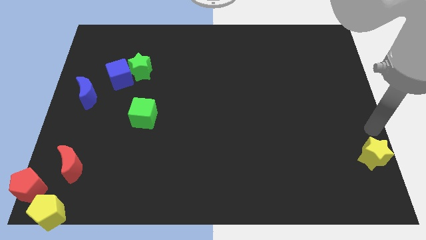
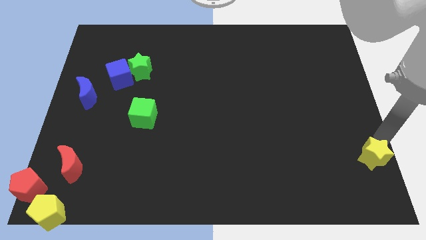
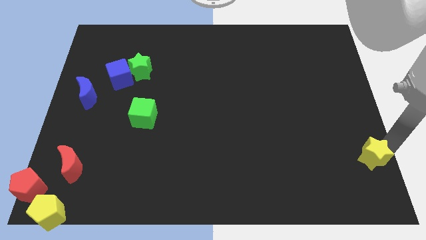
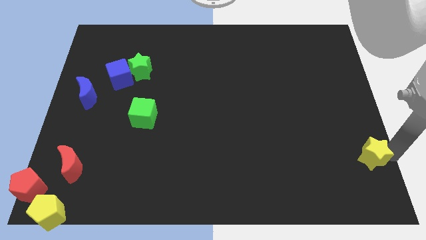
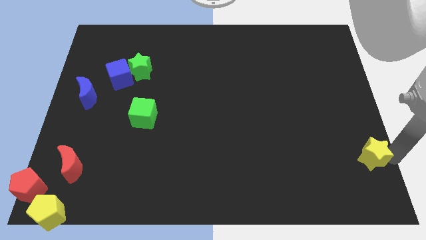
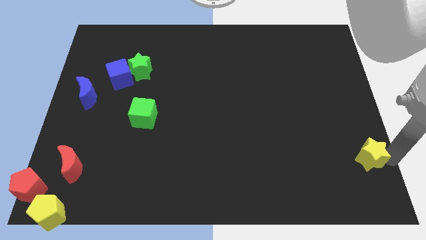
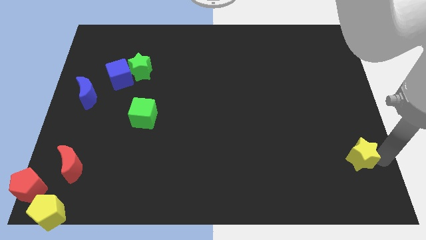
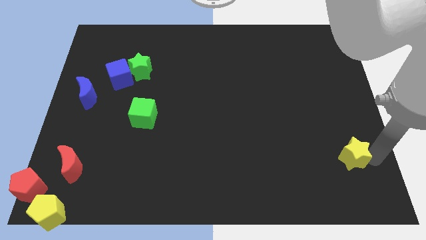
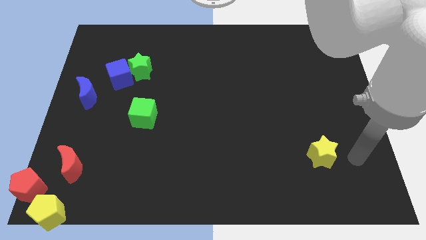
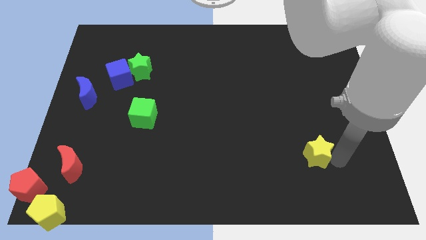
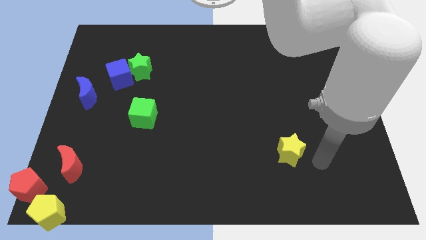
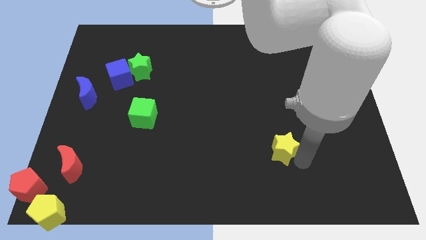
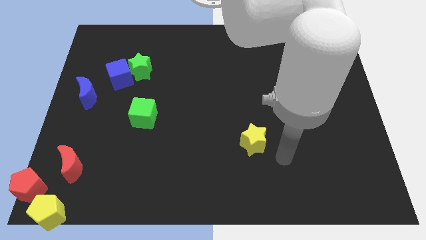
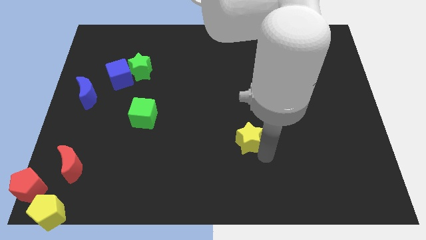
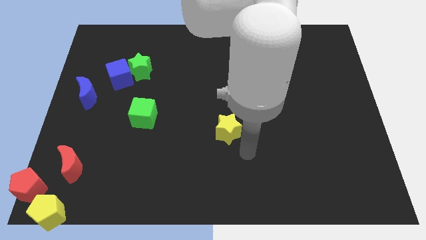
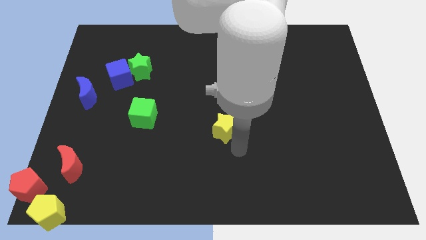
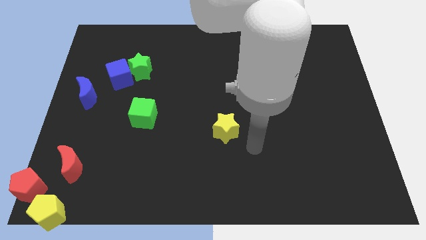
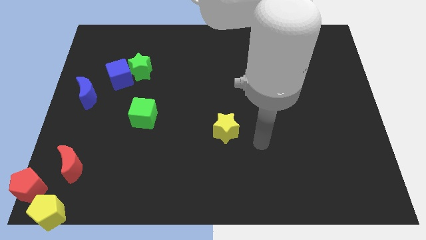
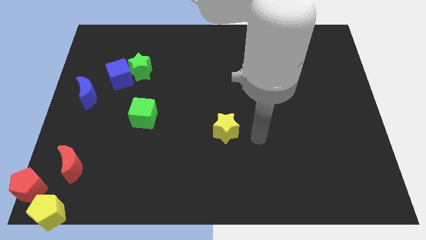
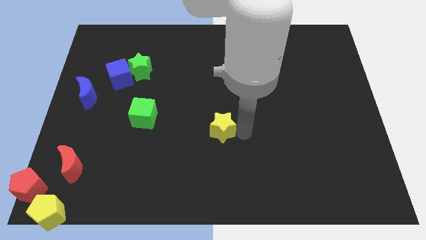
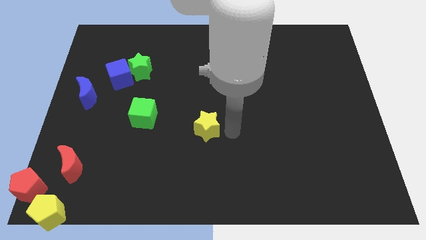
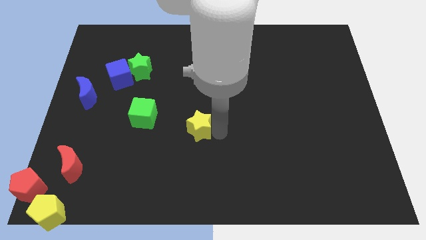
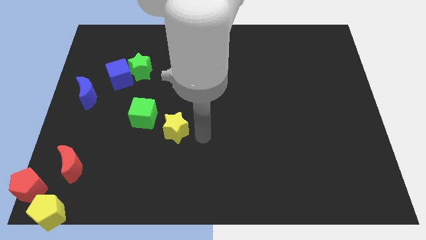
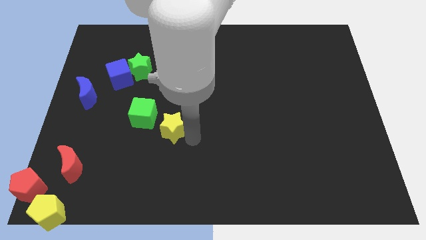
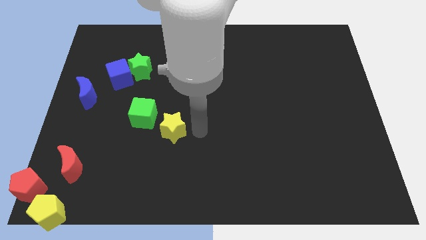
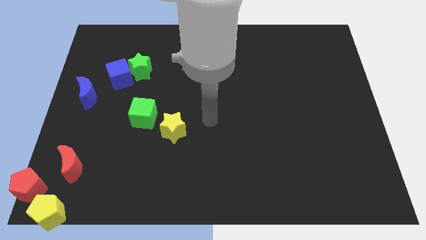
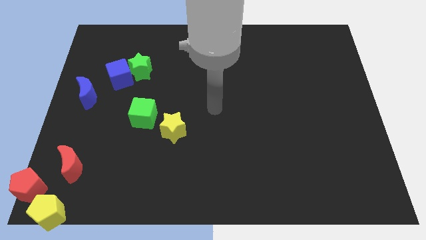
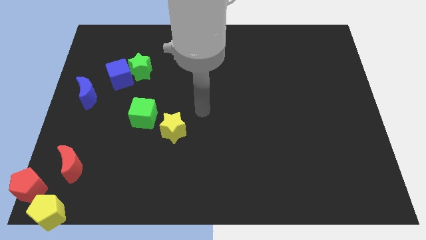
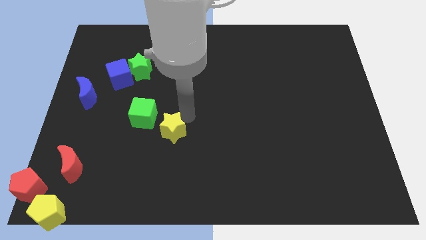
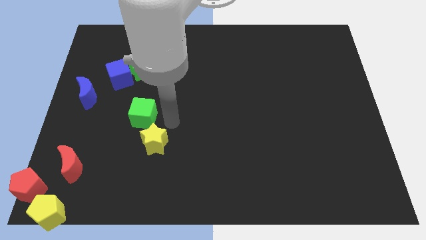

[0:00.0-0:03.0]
move yellow star towards green cube

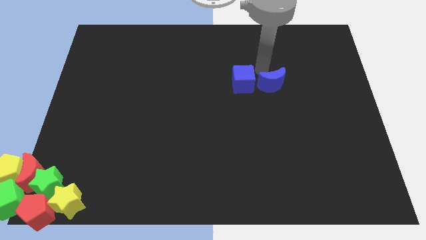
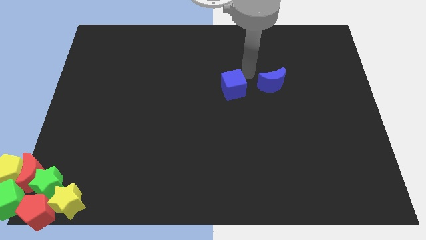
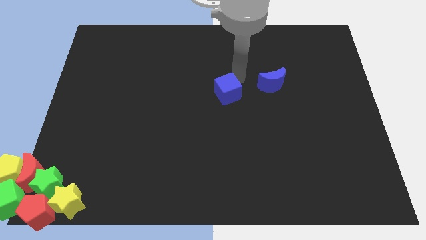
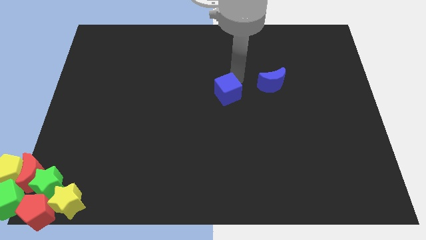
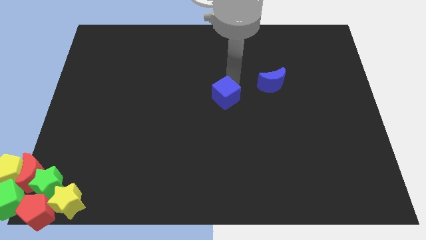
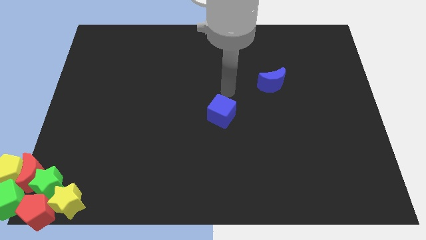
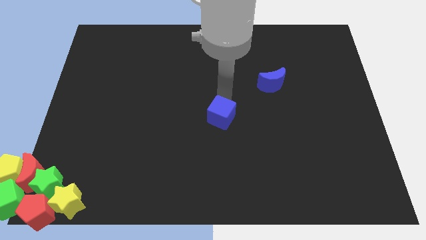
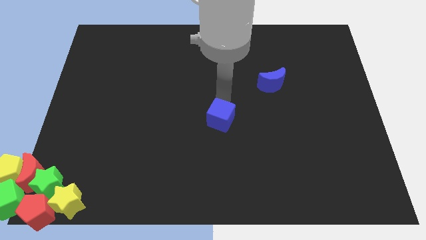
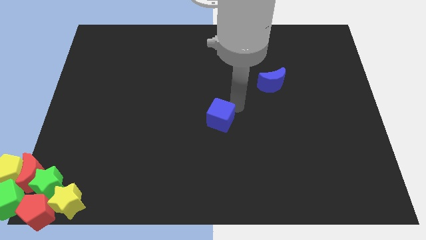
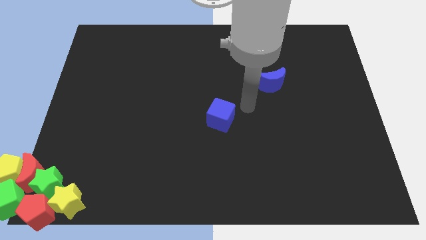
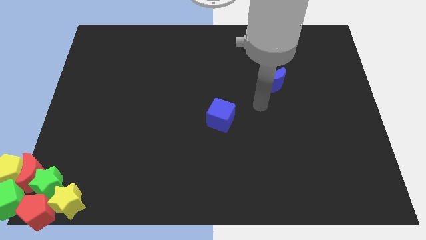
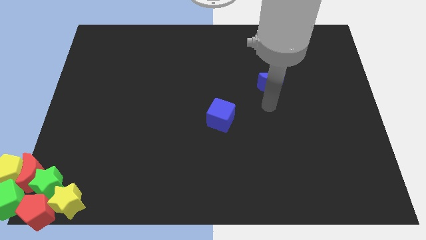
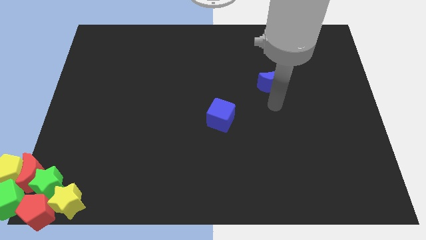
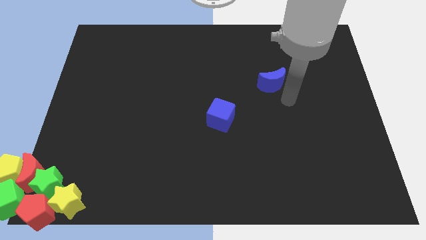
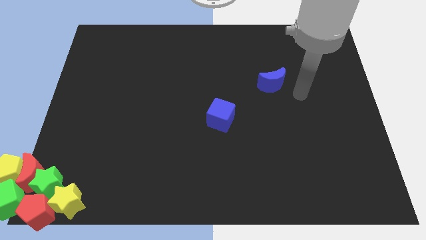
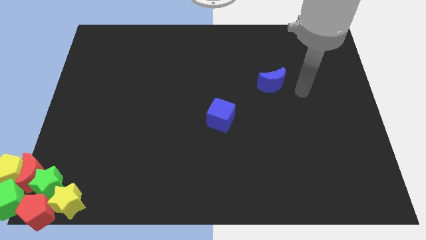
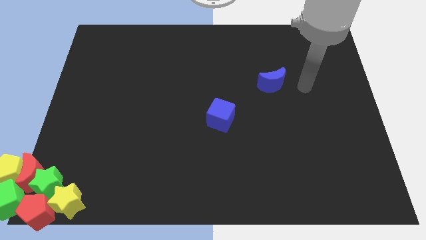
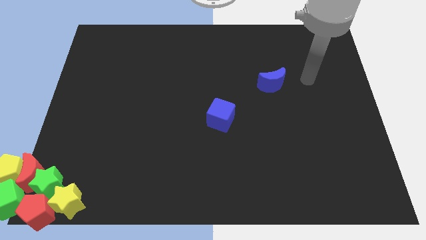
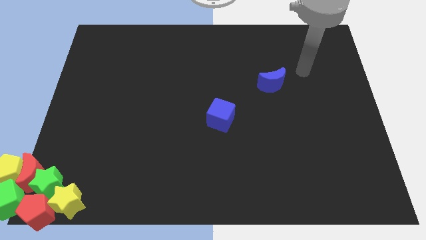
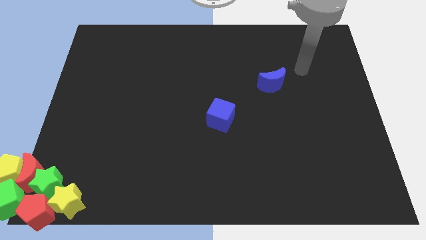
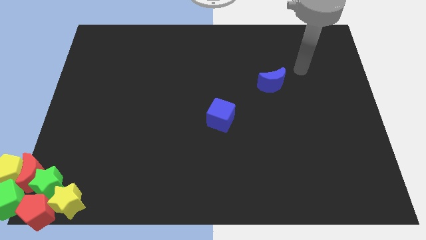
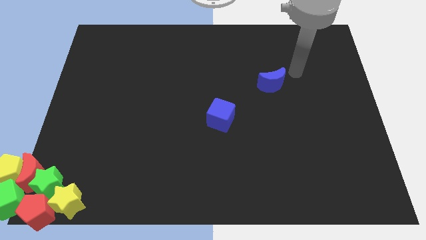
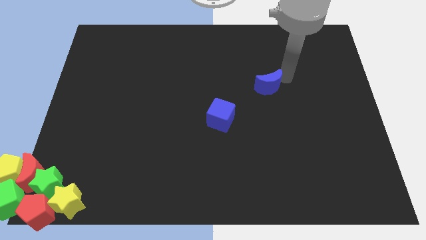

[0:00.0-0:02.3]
move the blue cube at the center of the board

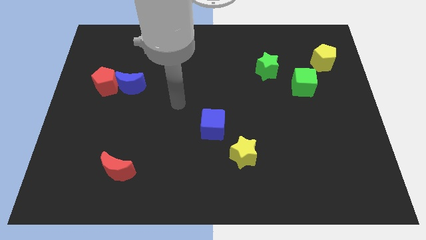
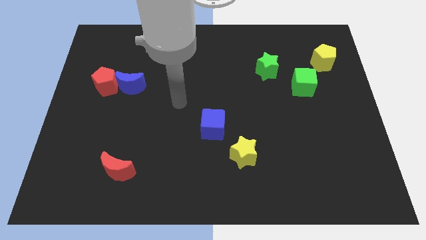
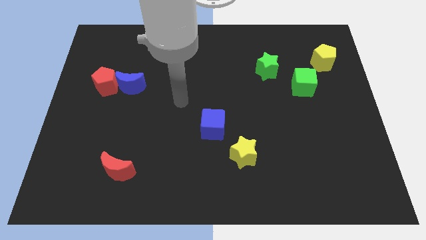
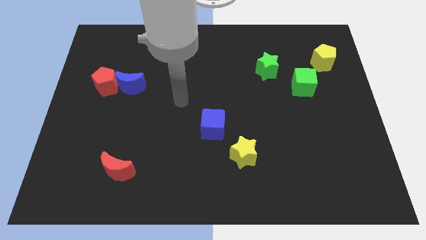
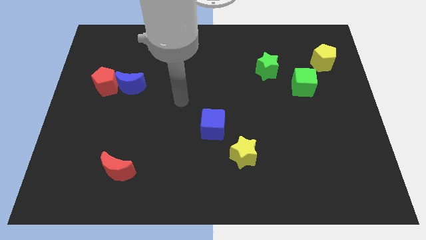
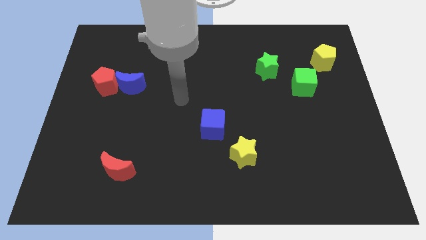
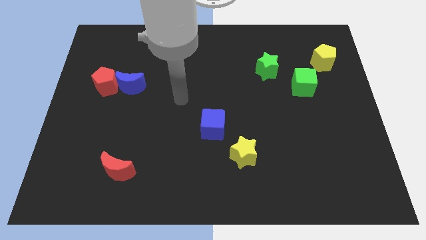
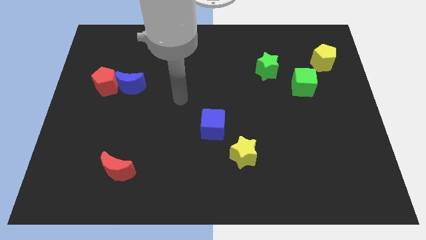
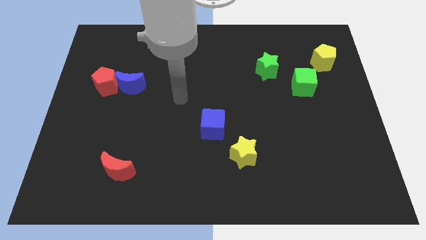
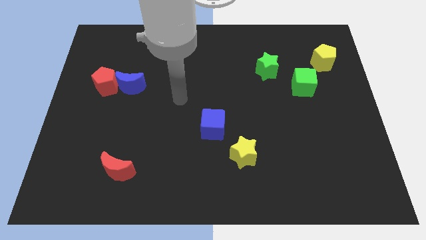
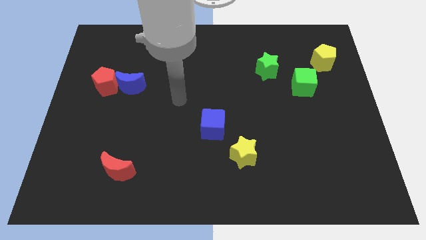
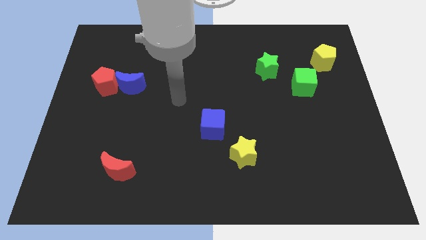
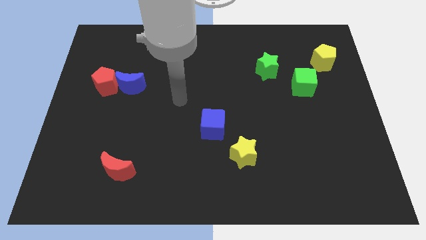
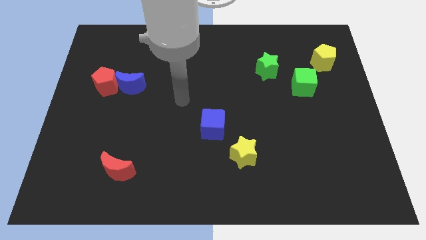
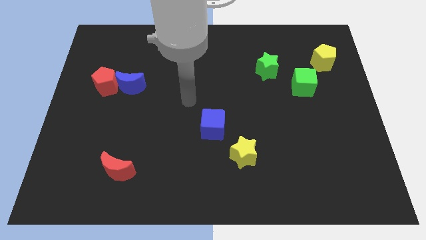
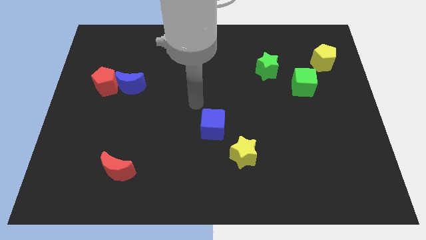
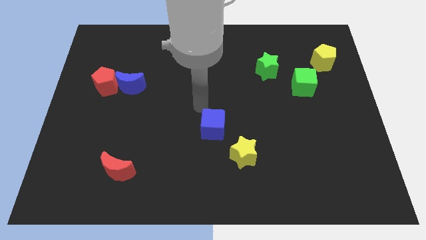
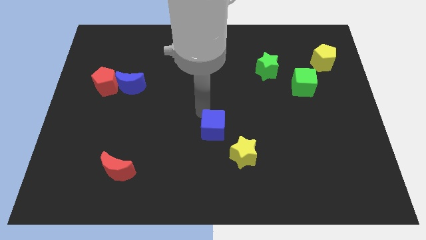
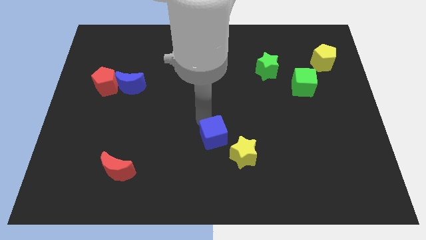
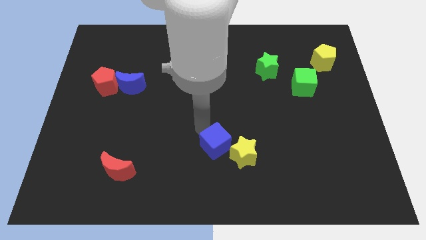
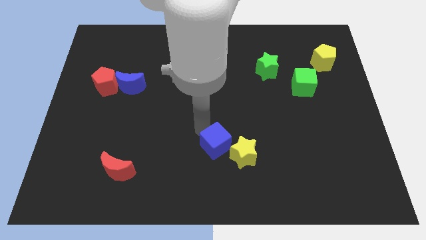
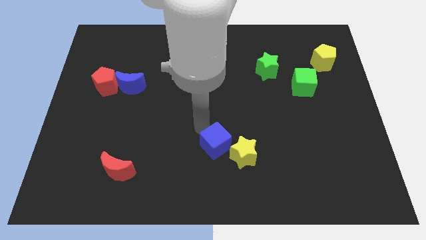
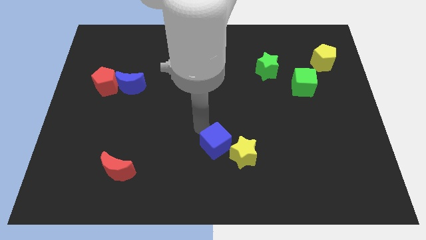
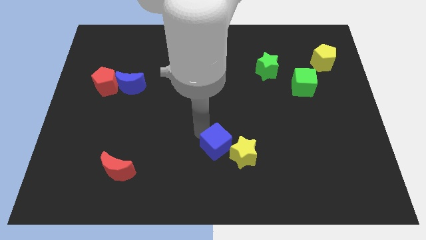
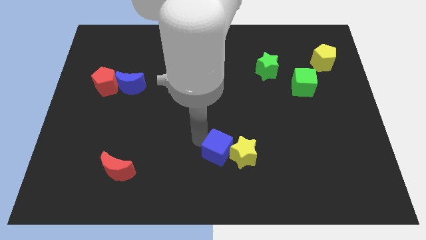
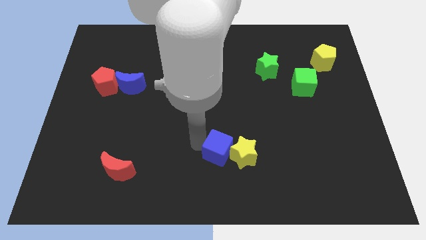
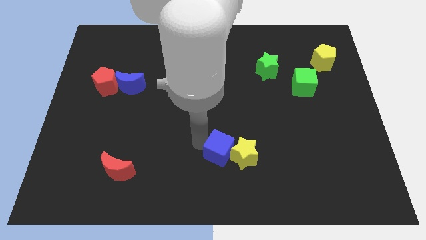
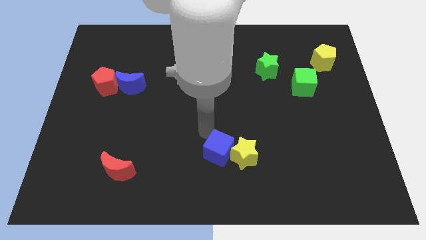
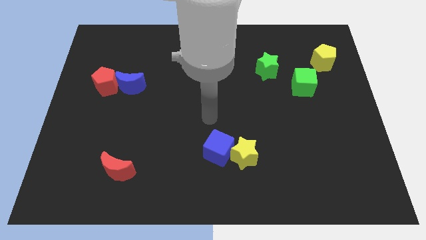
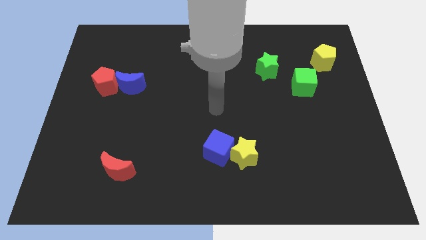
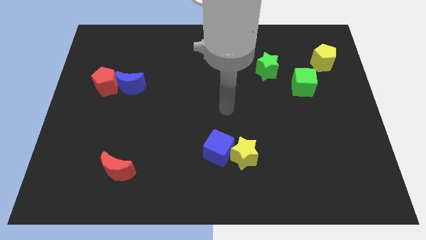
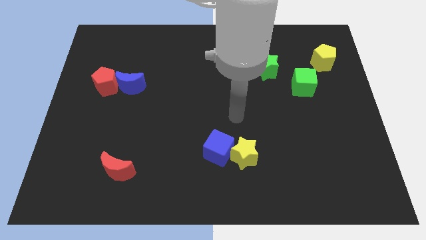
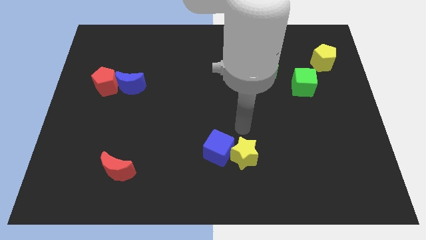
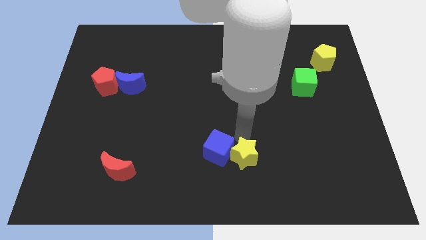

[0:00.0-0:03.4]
put the blue cube to the left of the yellow star

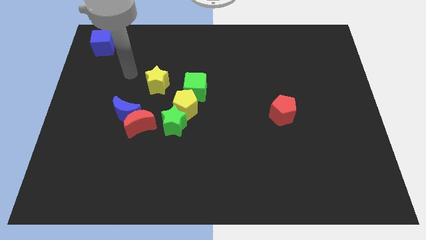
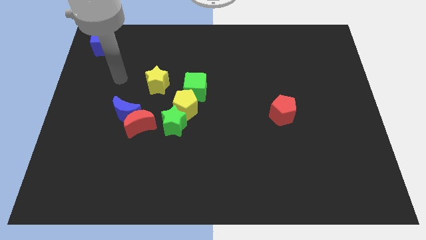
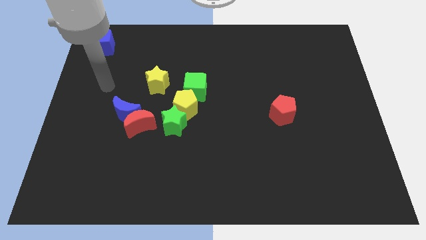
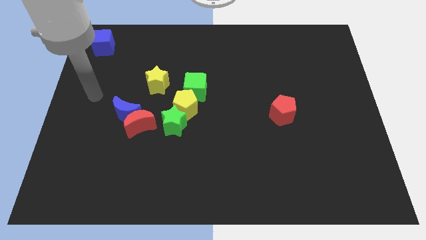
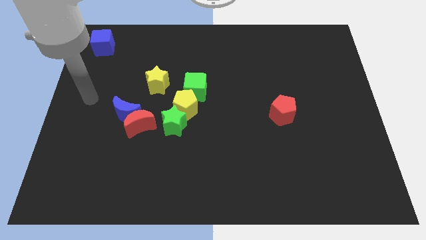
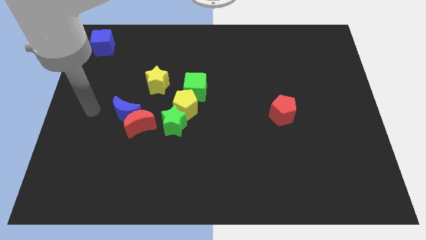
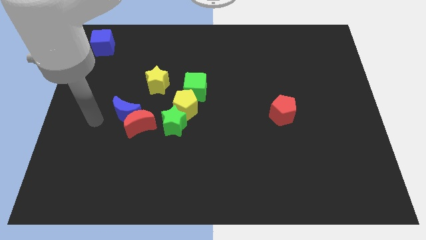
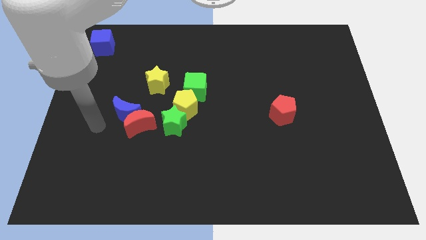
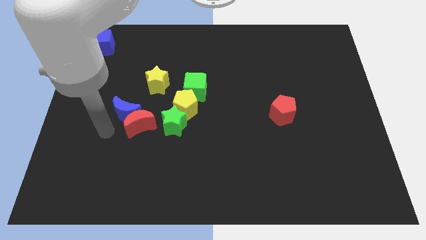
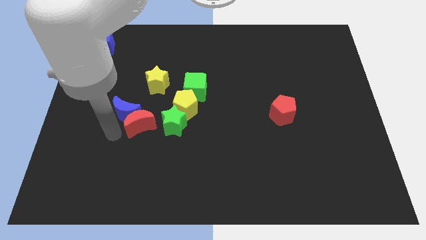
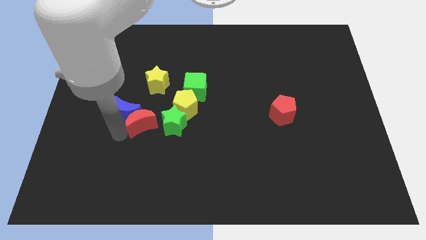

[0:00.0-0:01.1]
move the red moon between the green star and blue moon
